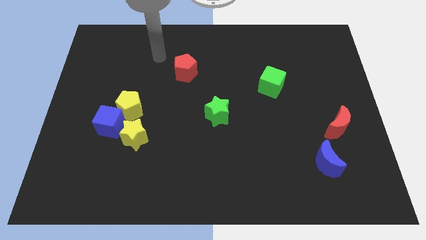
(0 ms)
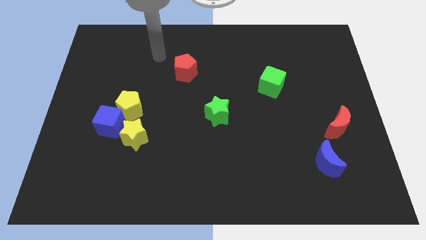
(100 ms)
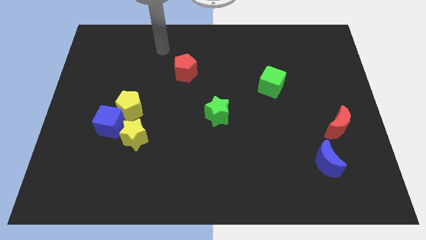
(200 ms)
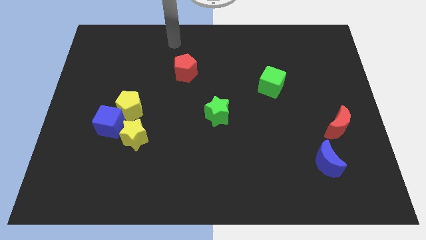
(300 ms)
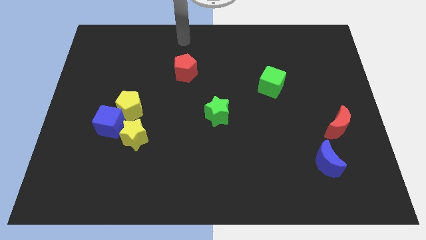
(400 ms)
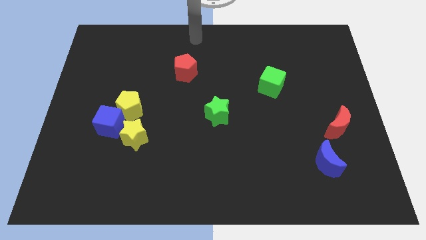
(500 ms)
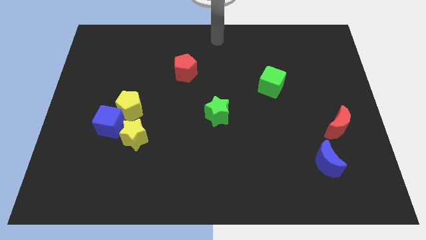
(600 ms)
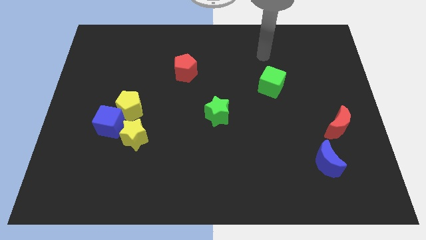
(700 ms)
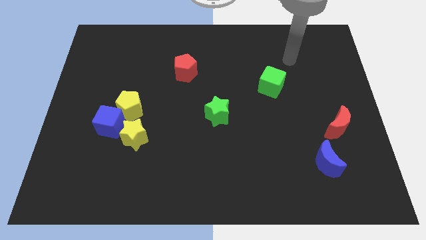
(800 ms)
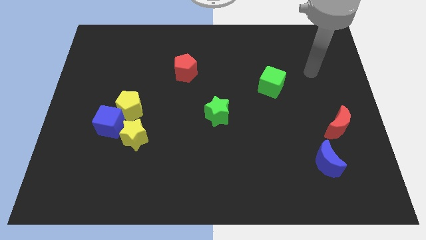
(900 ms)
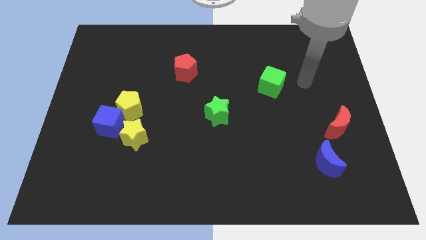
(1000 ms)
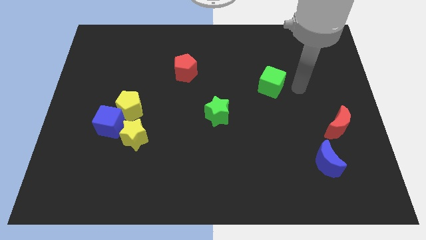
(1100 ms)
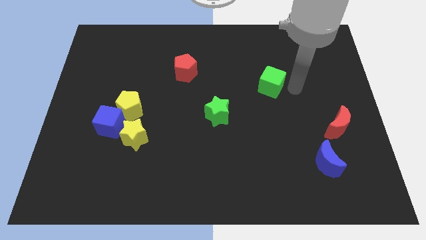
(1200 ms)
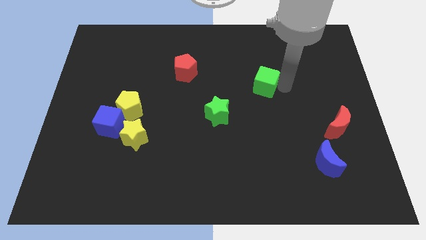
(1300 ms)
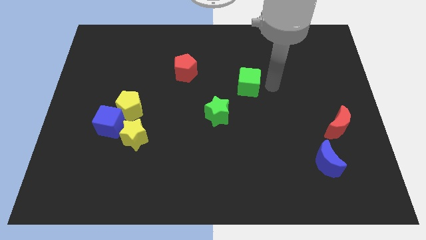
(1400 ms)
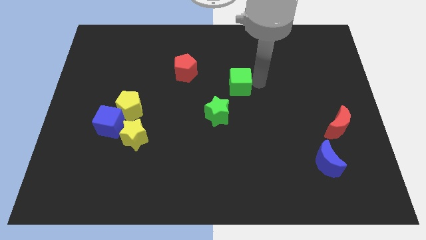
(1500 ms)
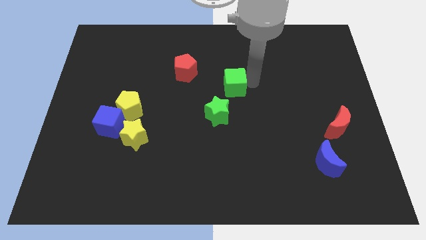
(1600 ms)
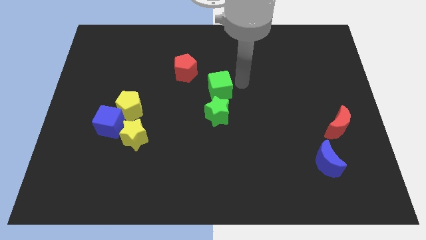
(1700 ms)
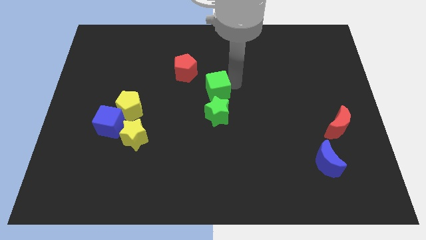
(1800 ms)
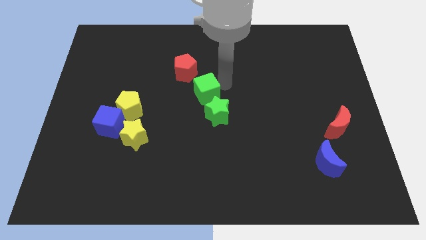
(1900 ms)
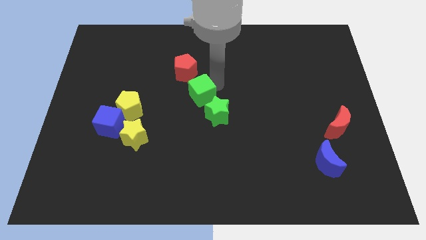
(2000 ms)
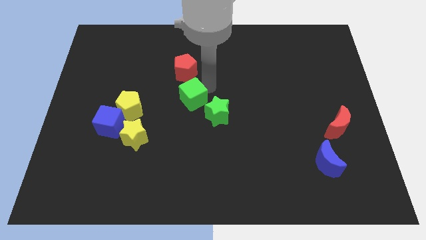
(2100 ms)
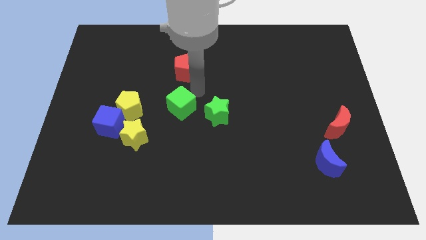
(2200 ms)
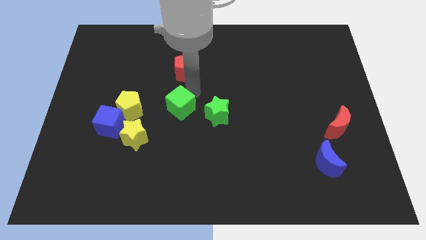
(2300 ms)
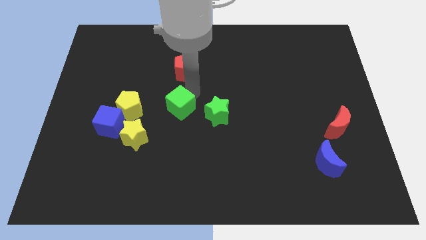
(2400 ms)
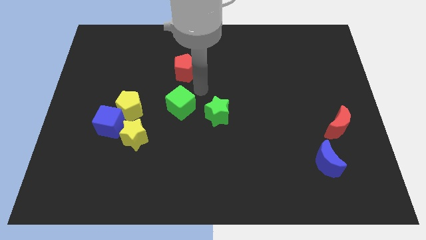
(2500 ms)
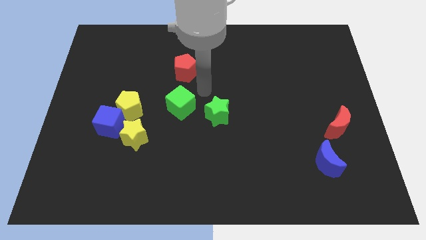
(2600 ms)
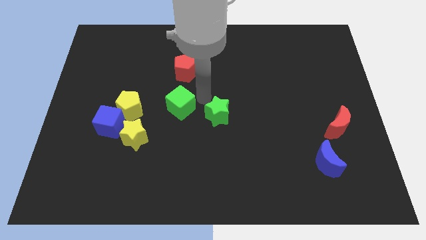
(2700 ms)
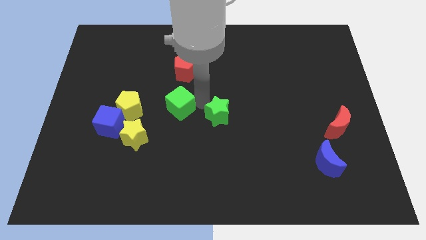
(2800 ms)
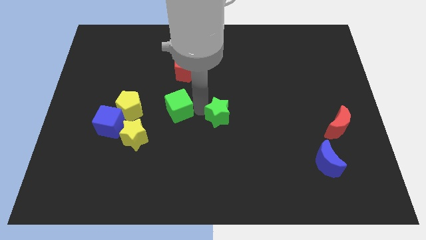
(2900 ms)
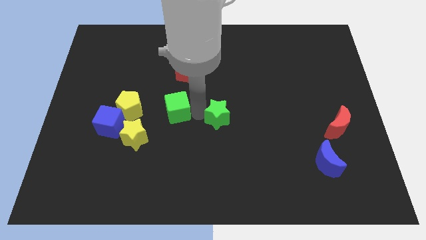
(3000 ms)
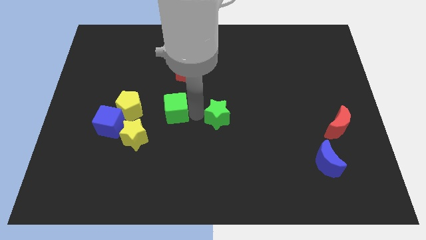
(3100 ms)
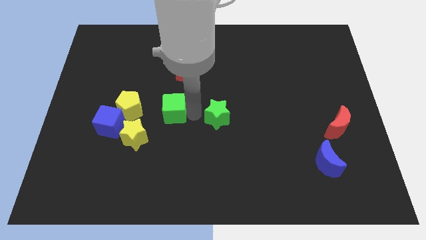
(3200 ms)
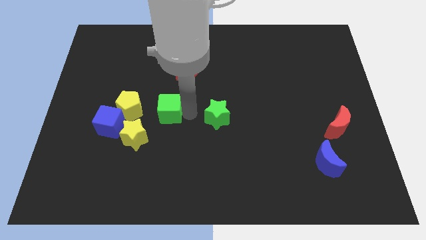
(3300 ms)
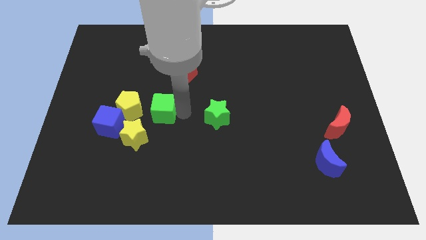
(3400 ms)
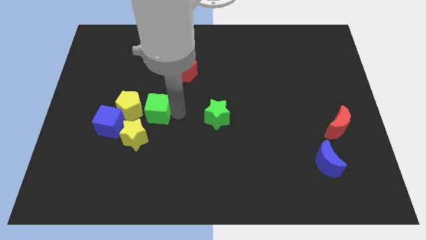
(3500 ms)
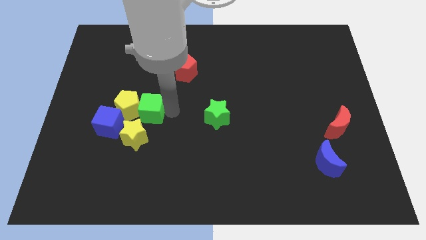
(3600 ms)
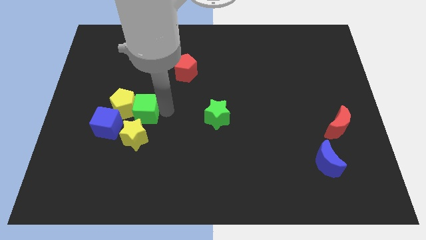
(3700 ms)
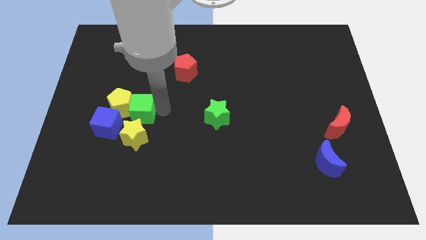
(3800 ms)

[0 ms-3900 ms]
slide the green cube close to the yellow pentagon

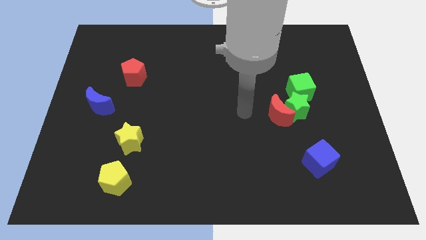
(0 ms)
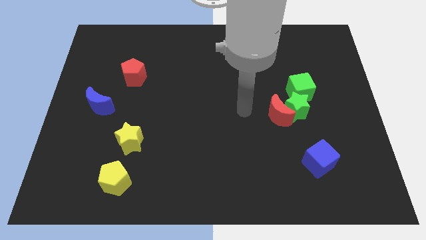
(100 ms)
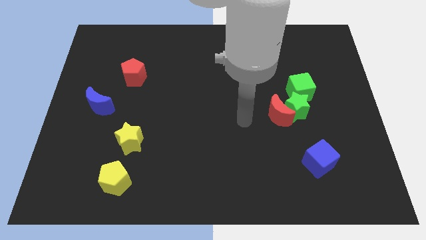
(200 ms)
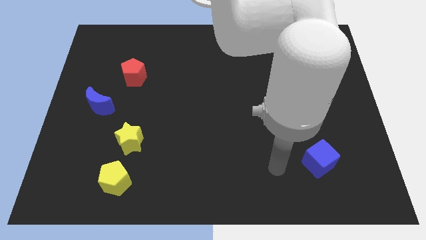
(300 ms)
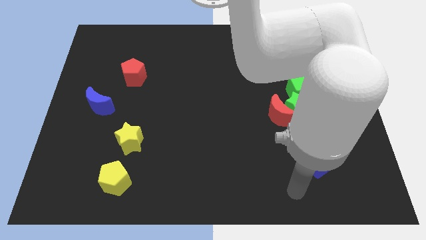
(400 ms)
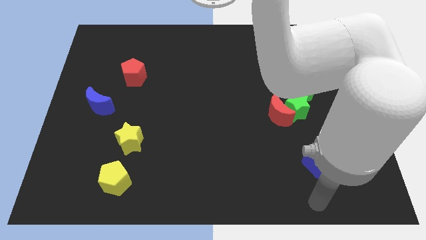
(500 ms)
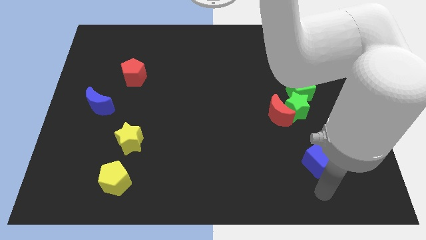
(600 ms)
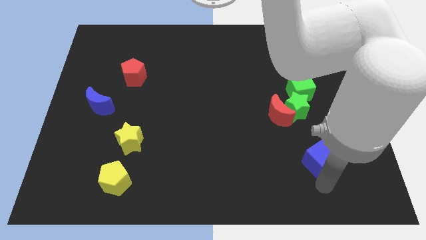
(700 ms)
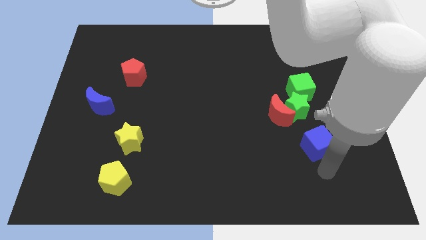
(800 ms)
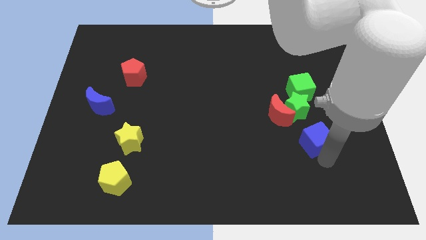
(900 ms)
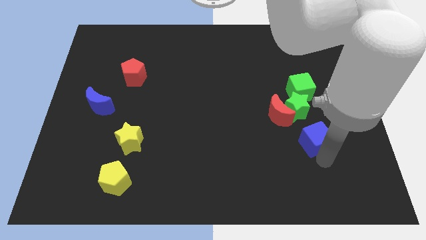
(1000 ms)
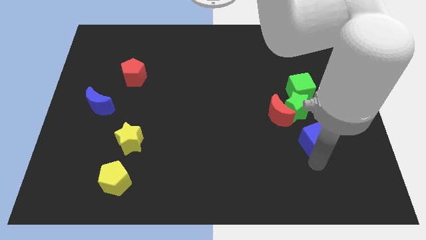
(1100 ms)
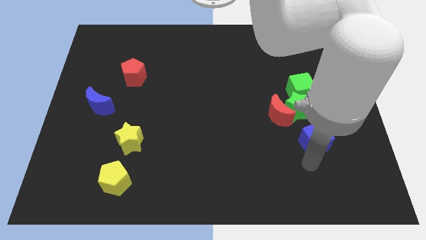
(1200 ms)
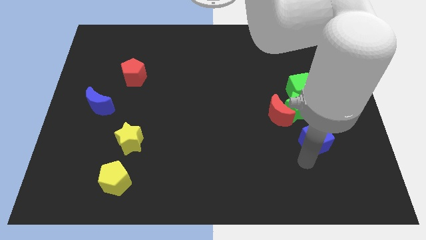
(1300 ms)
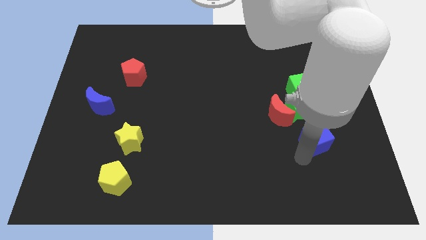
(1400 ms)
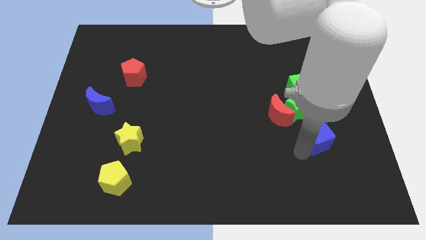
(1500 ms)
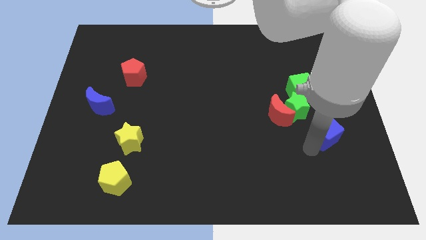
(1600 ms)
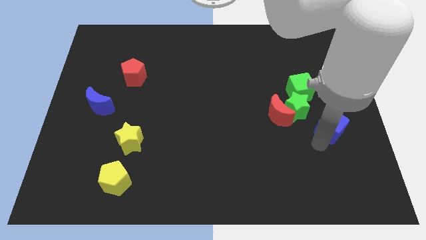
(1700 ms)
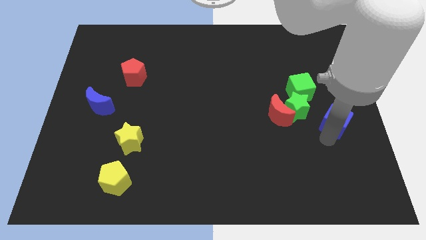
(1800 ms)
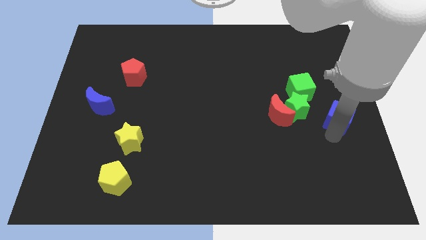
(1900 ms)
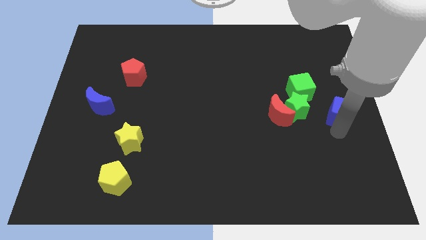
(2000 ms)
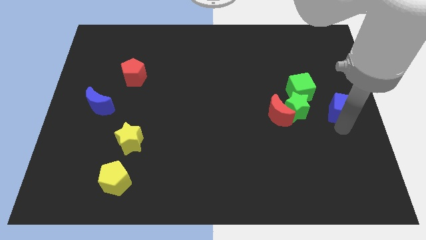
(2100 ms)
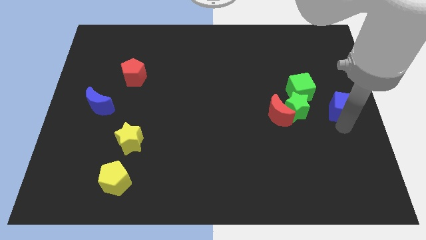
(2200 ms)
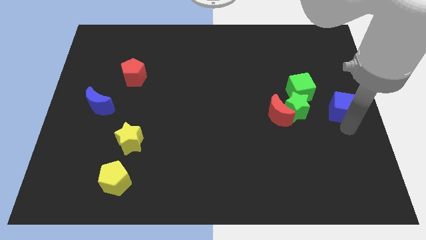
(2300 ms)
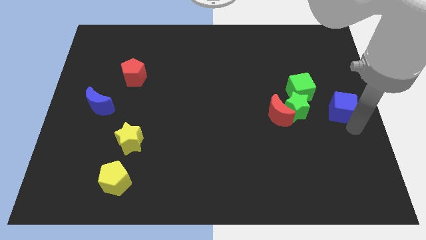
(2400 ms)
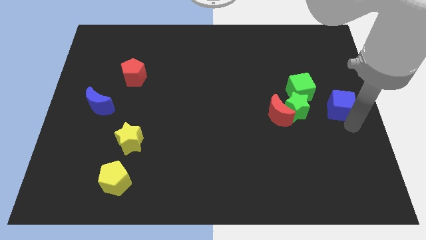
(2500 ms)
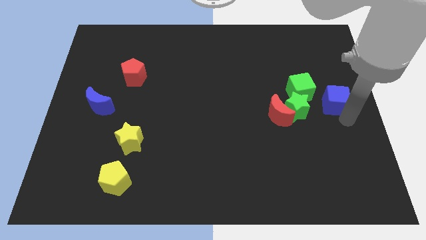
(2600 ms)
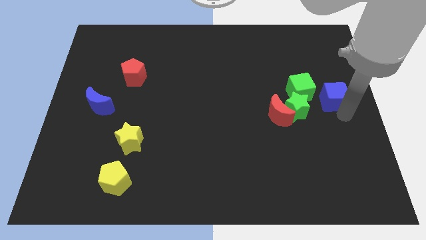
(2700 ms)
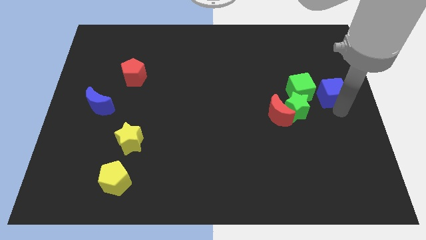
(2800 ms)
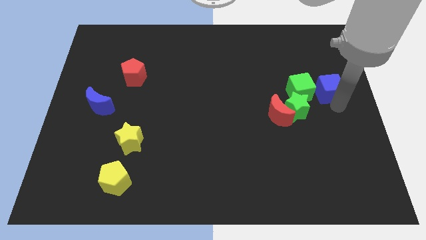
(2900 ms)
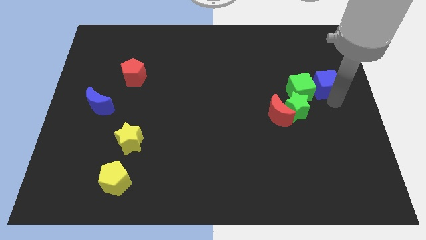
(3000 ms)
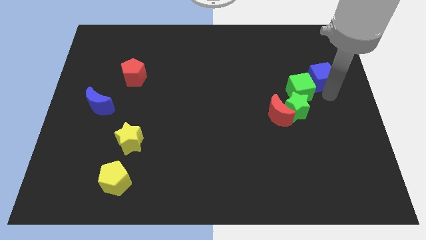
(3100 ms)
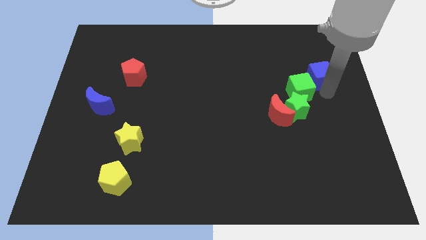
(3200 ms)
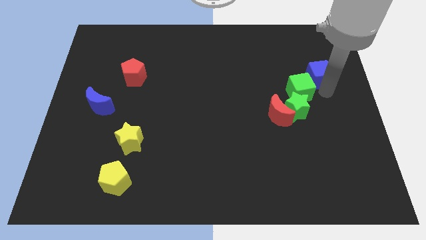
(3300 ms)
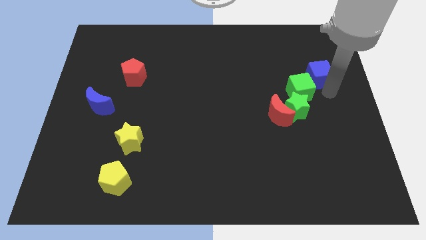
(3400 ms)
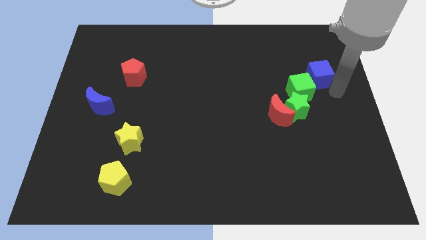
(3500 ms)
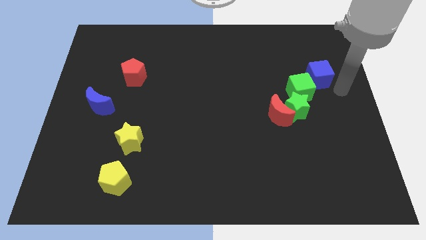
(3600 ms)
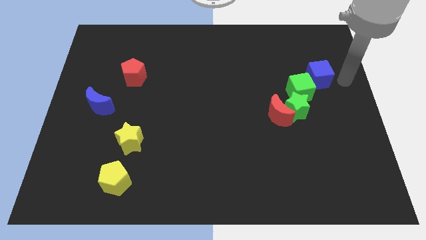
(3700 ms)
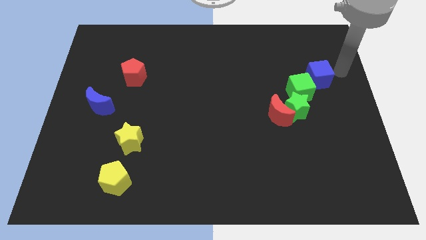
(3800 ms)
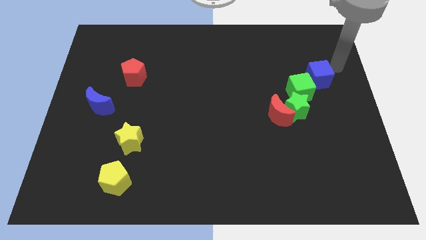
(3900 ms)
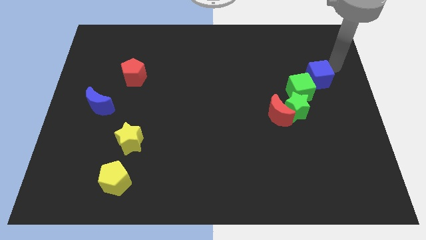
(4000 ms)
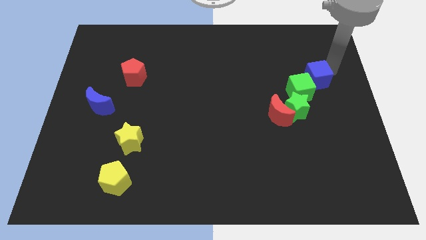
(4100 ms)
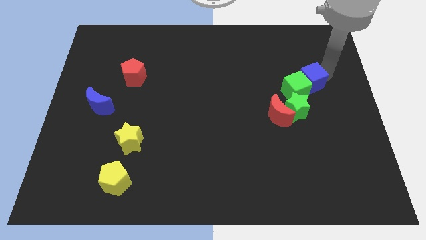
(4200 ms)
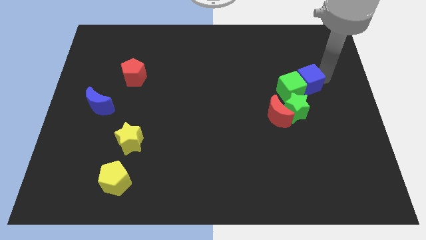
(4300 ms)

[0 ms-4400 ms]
move the blue cube to the green cube
